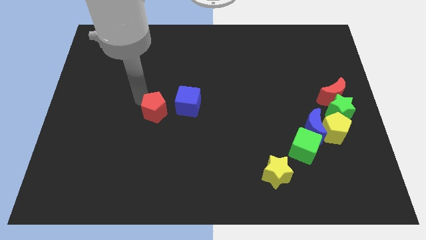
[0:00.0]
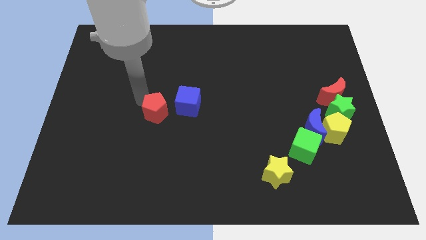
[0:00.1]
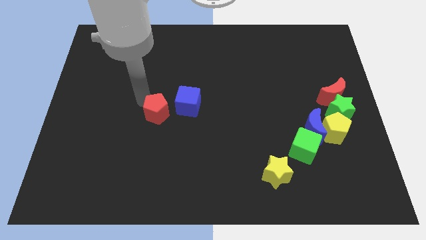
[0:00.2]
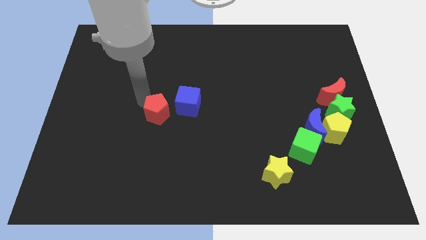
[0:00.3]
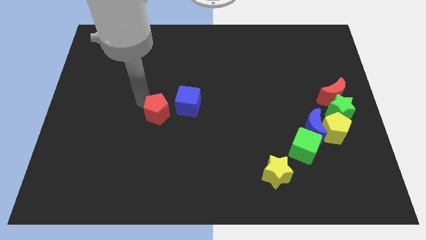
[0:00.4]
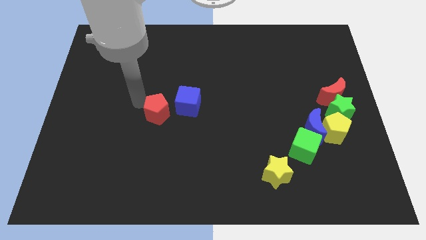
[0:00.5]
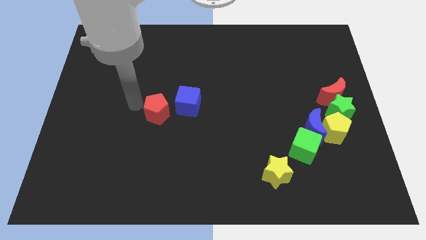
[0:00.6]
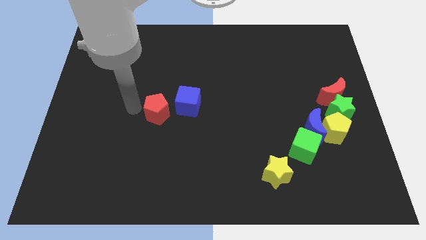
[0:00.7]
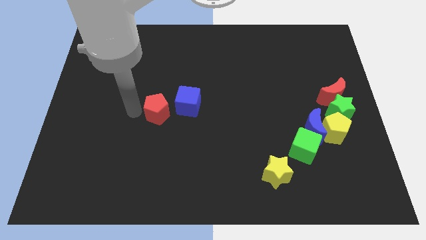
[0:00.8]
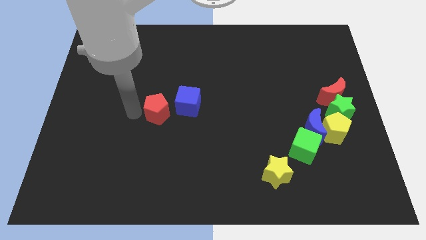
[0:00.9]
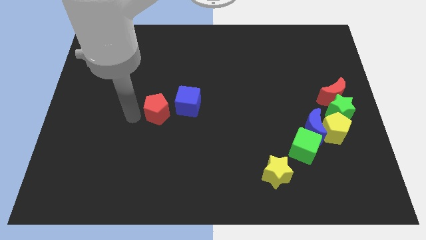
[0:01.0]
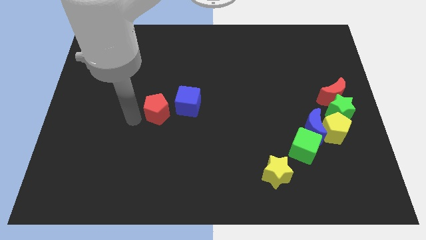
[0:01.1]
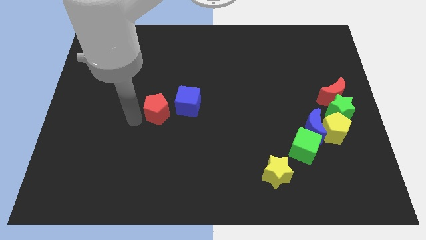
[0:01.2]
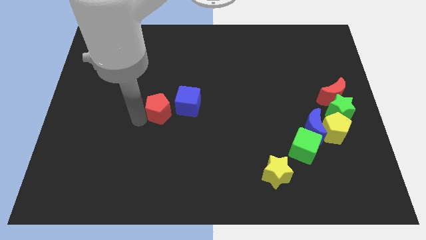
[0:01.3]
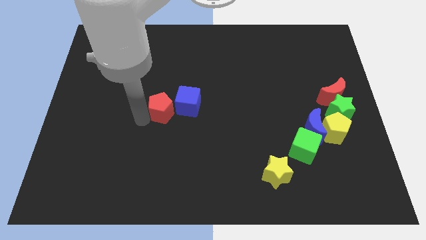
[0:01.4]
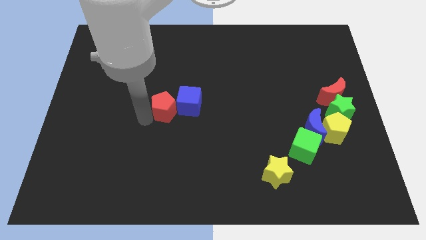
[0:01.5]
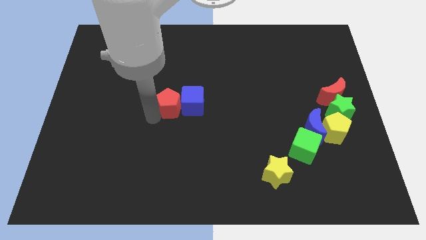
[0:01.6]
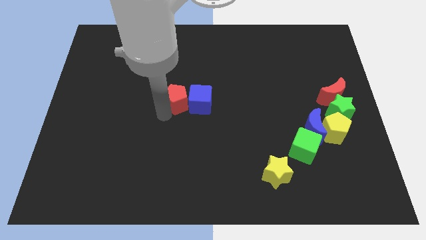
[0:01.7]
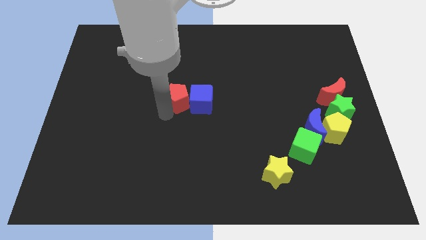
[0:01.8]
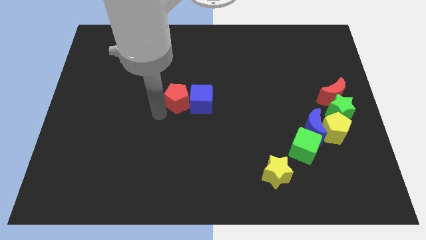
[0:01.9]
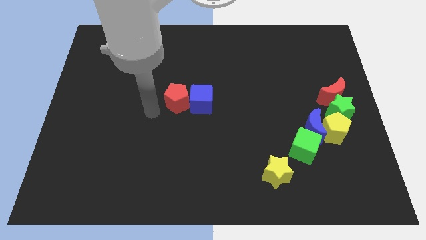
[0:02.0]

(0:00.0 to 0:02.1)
push red pentagon into blue cube

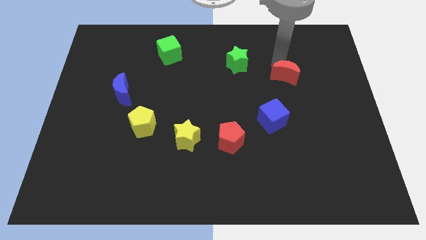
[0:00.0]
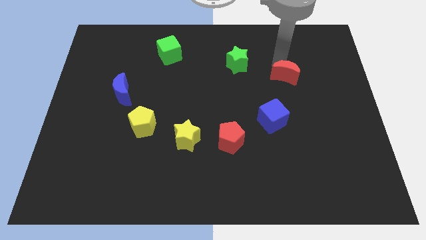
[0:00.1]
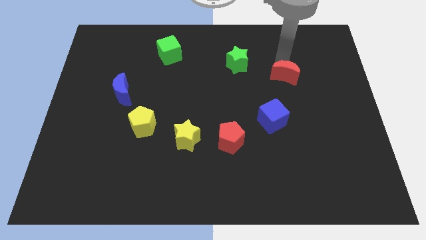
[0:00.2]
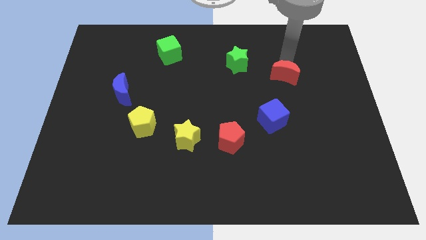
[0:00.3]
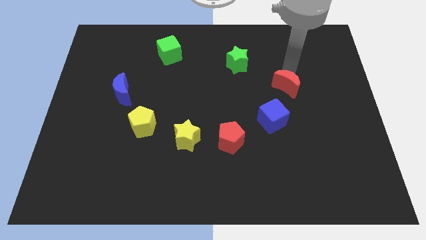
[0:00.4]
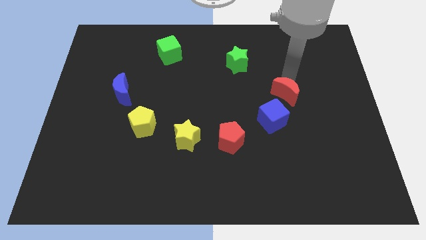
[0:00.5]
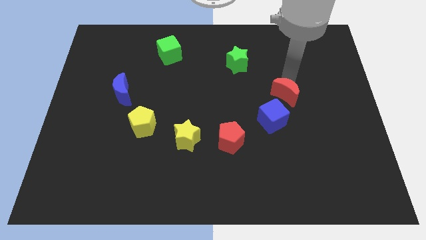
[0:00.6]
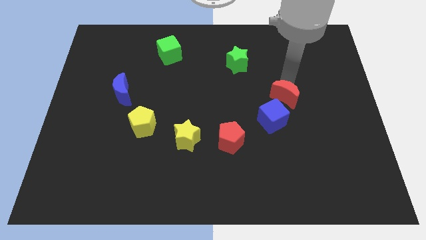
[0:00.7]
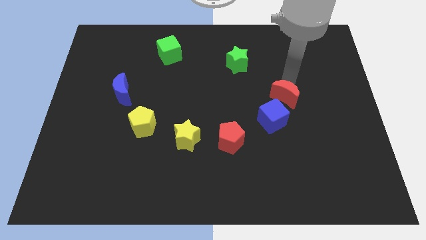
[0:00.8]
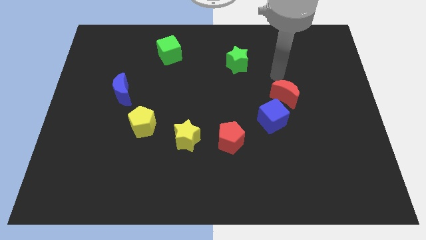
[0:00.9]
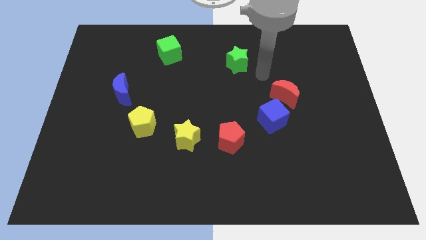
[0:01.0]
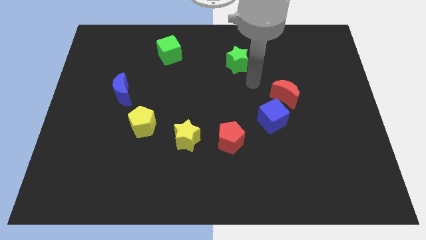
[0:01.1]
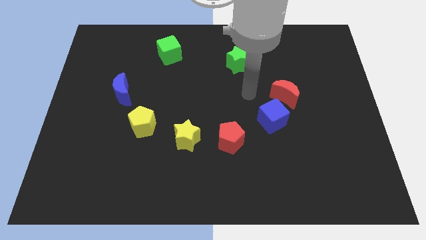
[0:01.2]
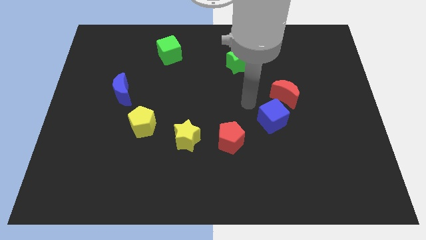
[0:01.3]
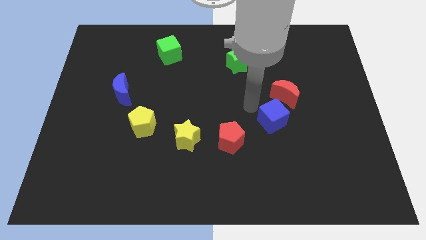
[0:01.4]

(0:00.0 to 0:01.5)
push the red crescent close to the blue cube

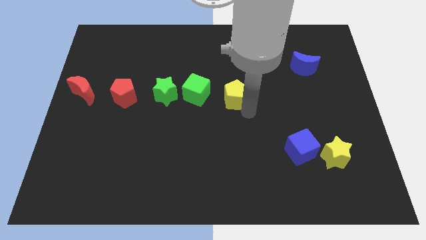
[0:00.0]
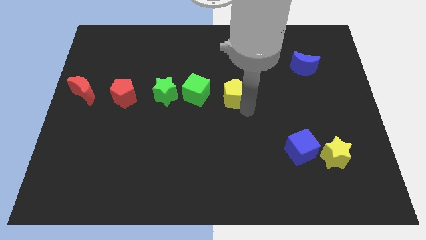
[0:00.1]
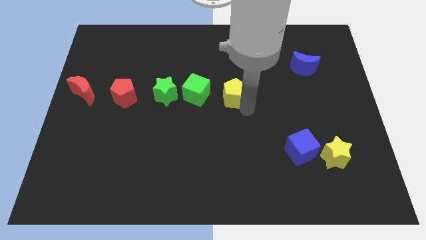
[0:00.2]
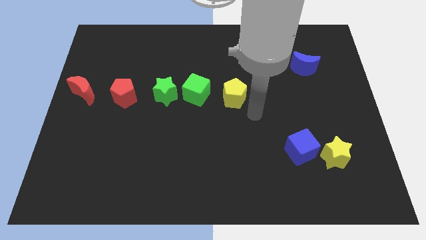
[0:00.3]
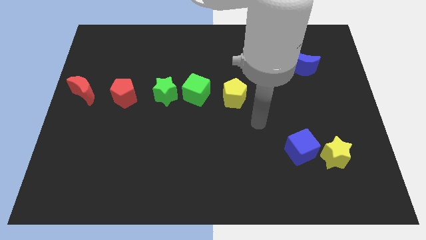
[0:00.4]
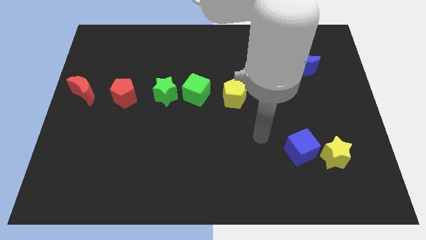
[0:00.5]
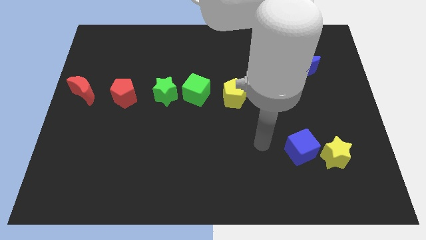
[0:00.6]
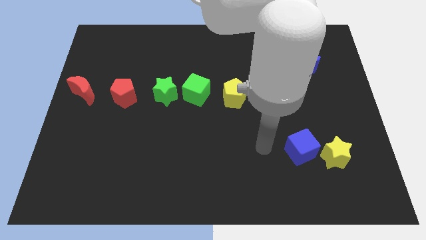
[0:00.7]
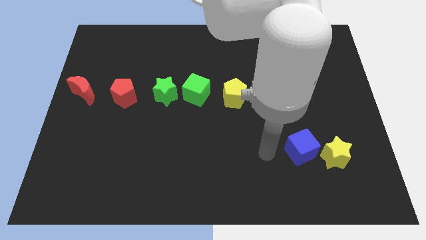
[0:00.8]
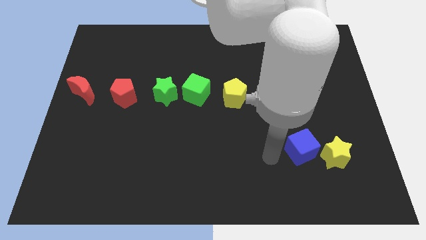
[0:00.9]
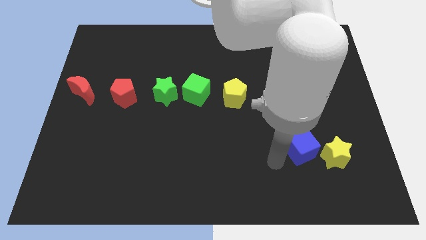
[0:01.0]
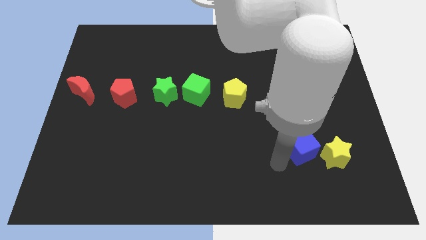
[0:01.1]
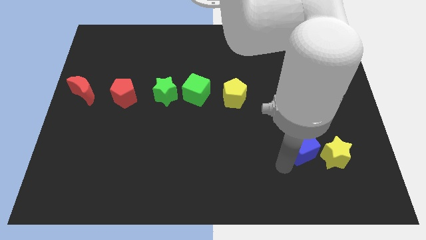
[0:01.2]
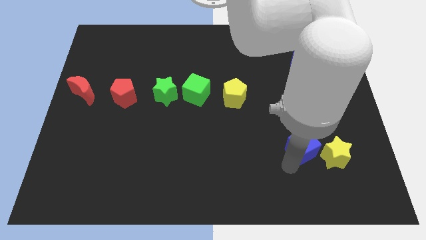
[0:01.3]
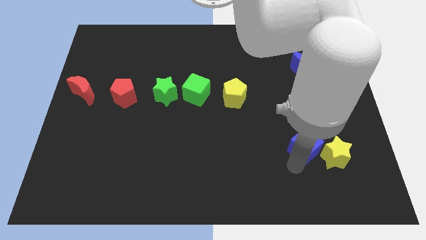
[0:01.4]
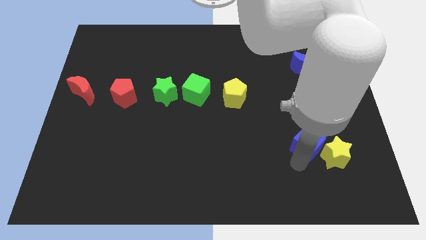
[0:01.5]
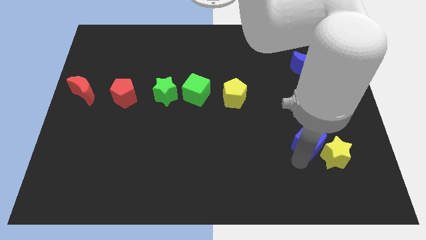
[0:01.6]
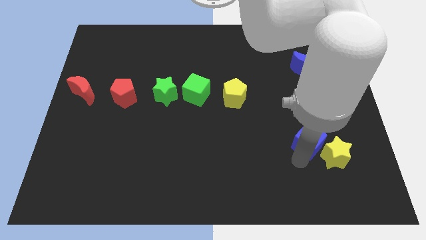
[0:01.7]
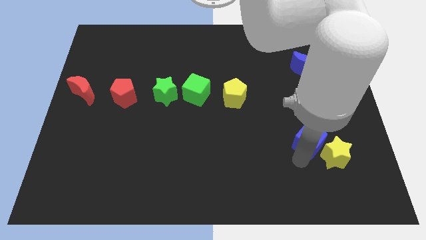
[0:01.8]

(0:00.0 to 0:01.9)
slightly touch the blue cube

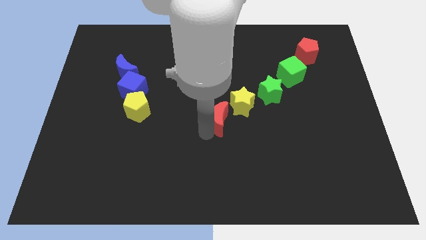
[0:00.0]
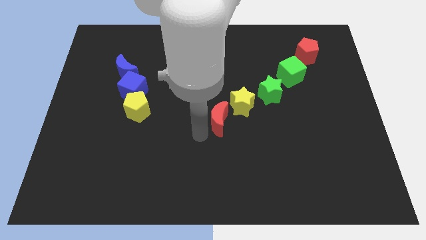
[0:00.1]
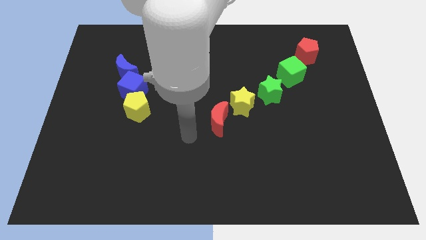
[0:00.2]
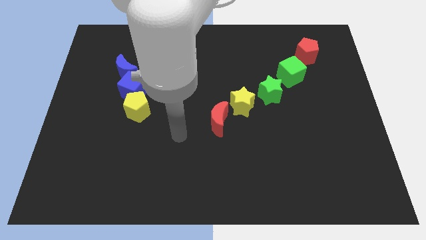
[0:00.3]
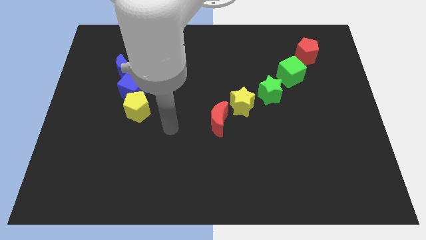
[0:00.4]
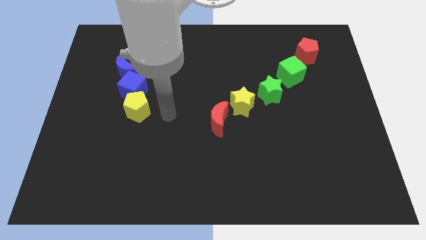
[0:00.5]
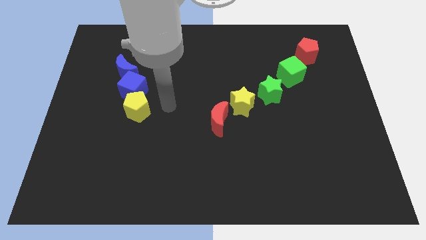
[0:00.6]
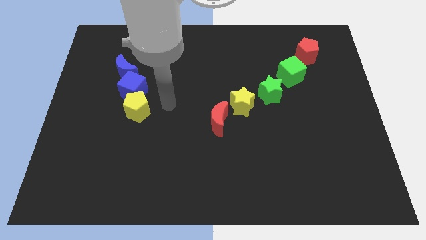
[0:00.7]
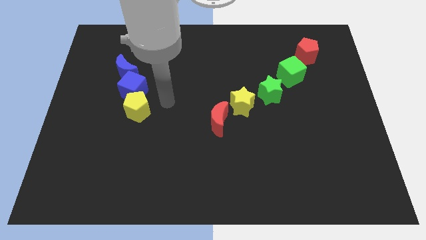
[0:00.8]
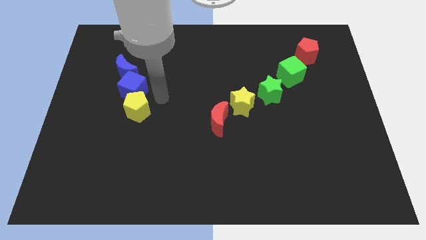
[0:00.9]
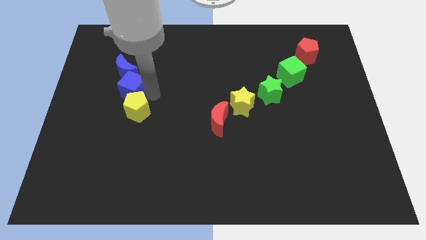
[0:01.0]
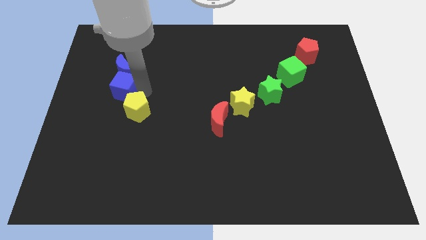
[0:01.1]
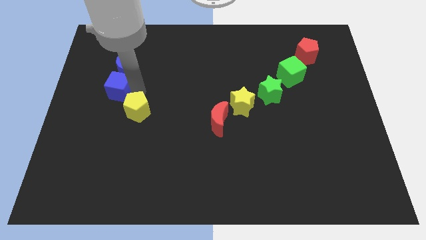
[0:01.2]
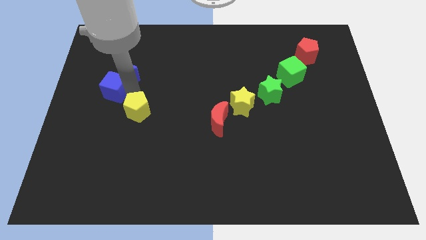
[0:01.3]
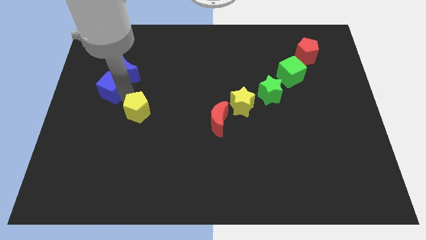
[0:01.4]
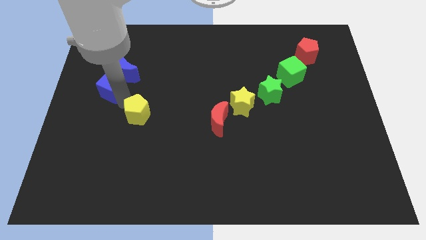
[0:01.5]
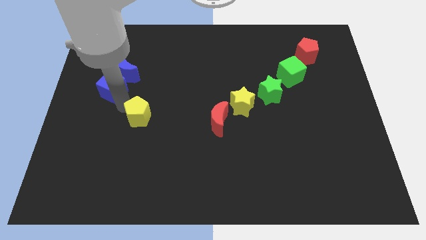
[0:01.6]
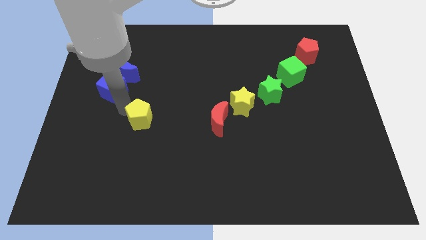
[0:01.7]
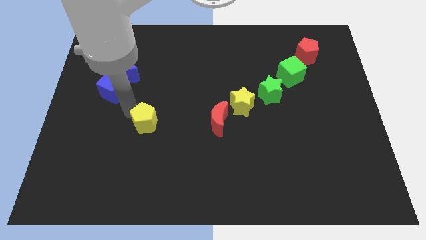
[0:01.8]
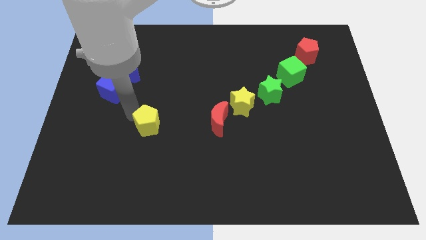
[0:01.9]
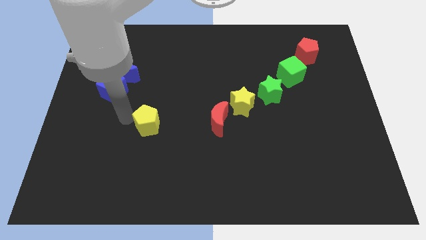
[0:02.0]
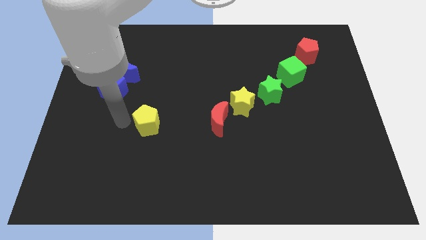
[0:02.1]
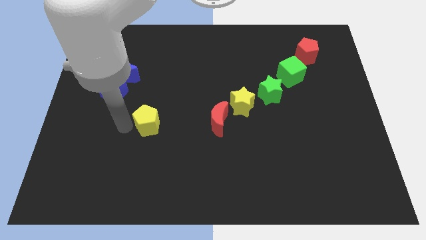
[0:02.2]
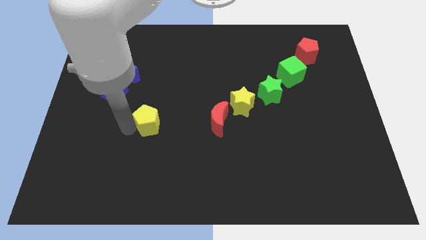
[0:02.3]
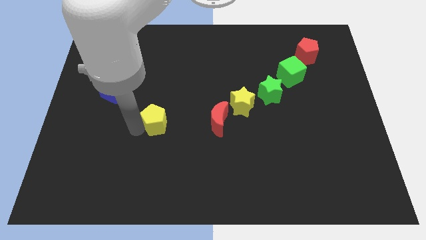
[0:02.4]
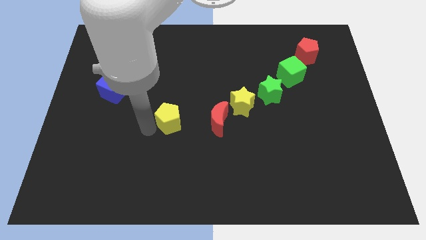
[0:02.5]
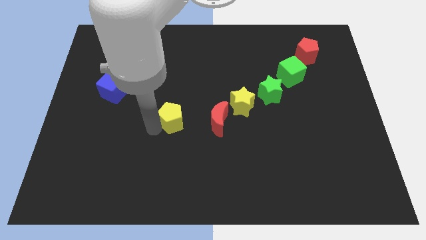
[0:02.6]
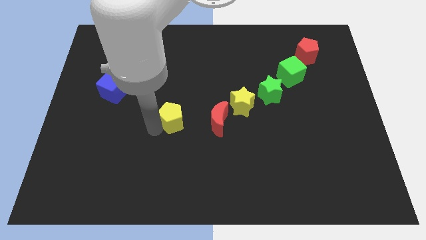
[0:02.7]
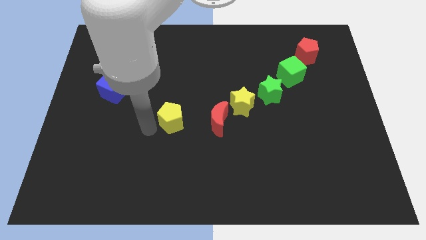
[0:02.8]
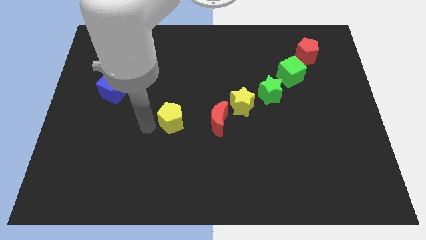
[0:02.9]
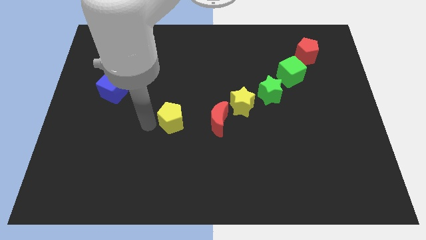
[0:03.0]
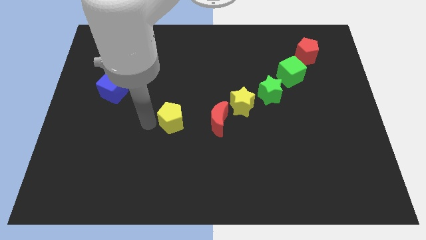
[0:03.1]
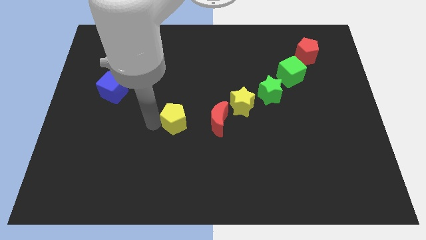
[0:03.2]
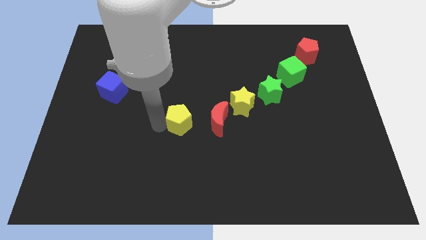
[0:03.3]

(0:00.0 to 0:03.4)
place yellow pentagon to the left of red moon

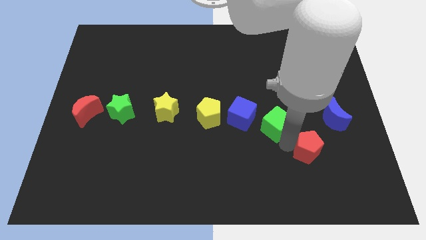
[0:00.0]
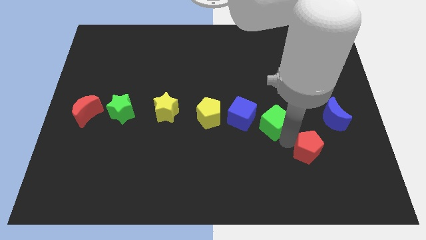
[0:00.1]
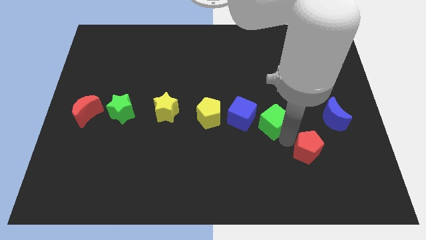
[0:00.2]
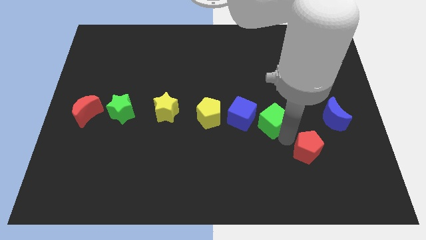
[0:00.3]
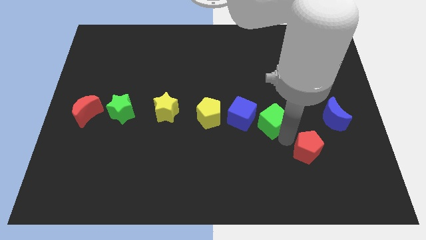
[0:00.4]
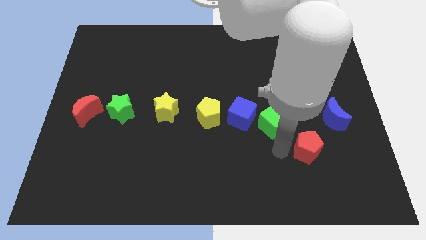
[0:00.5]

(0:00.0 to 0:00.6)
slightly push the green cube towards the right side of the blue cube
